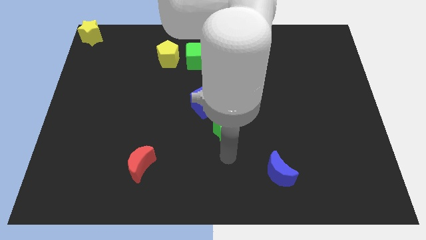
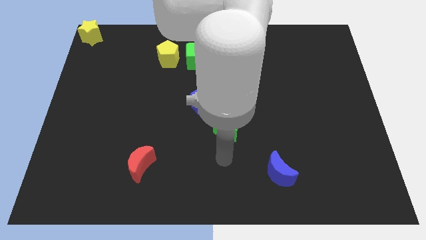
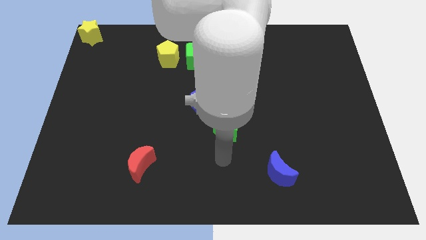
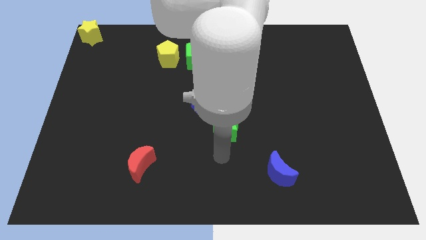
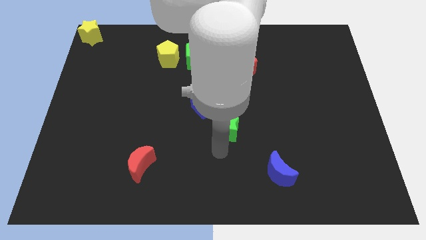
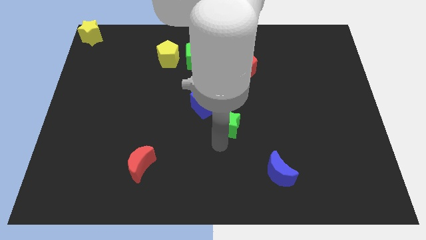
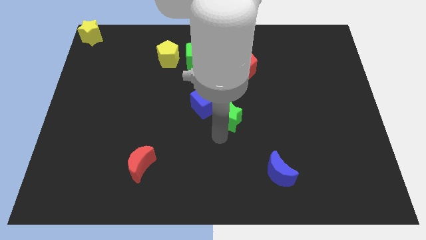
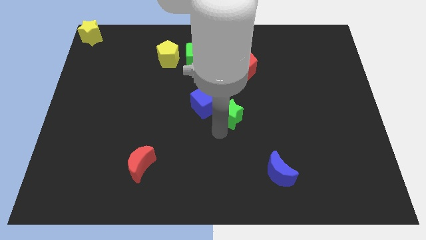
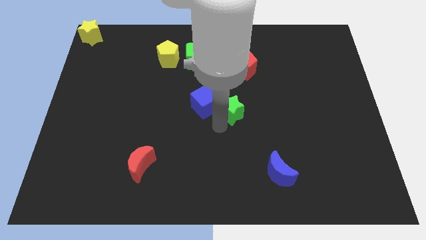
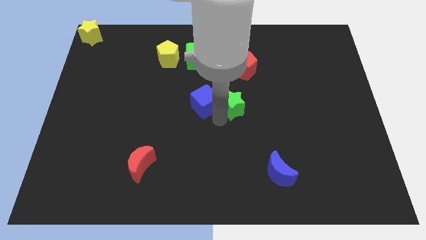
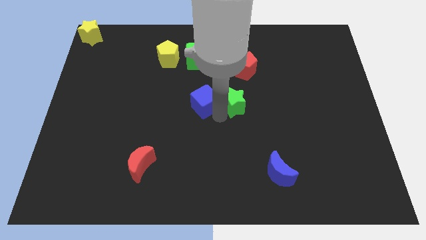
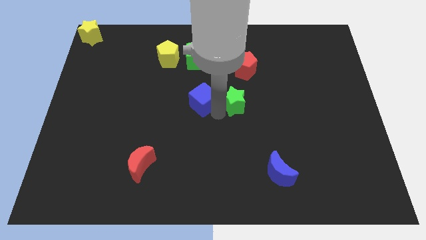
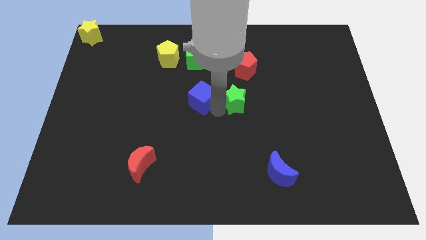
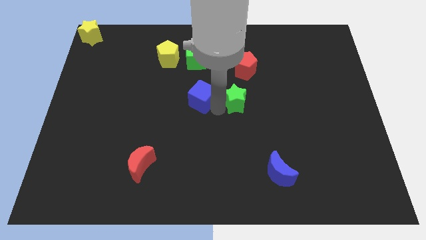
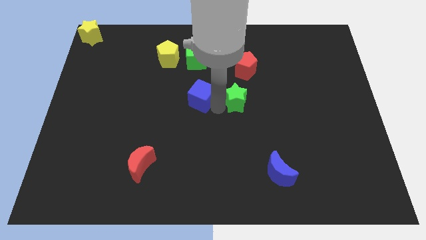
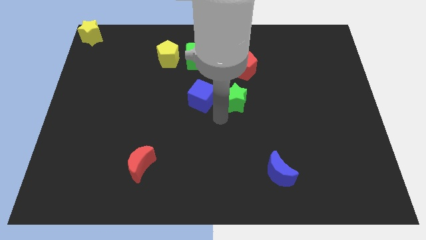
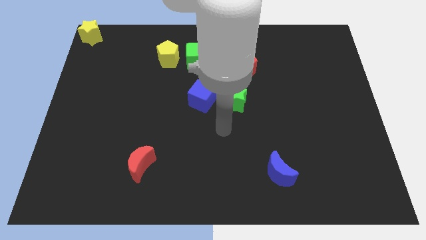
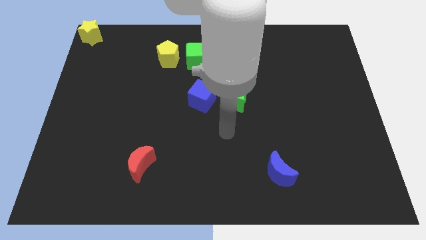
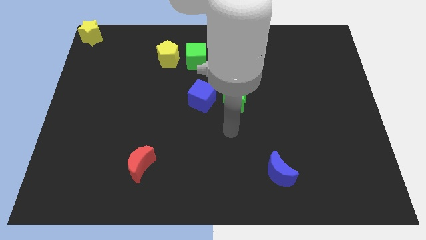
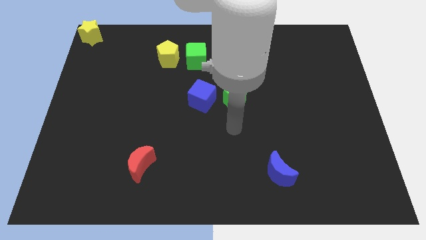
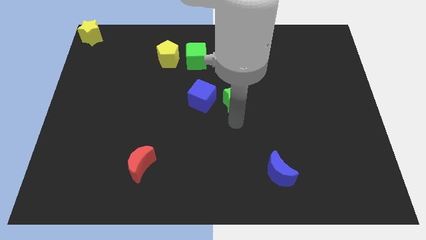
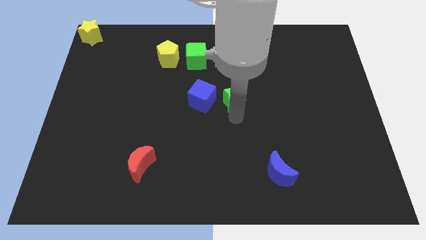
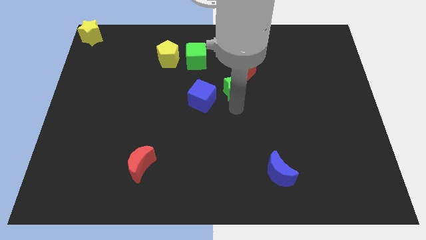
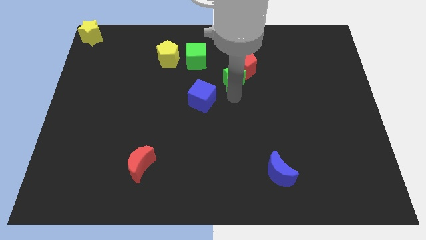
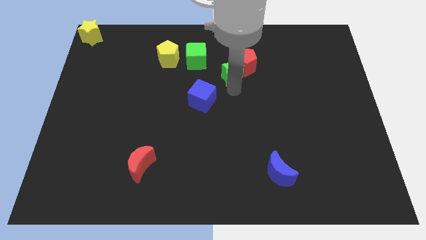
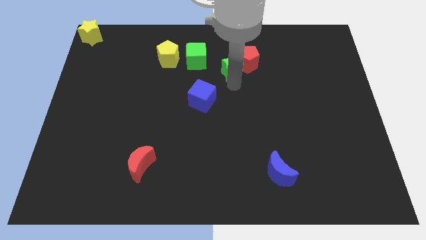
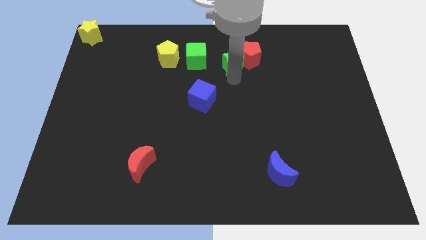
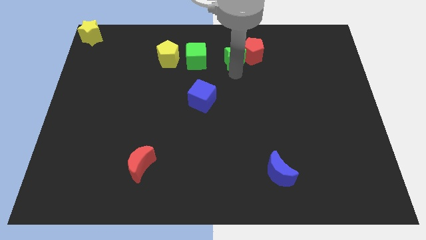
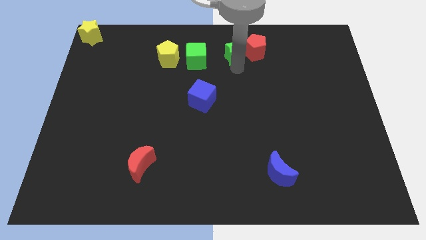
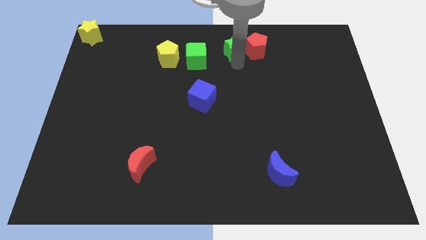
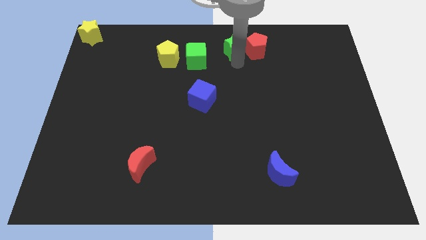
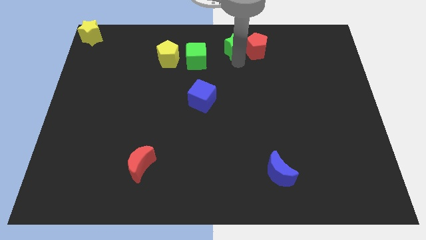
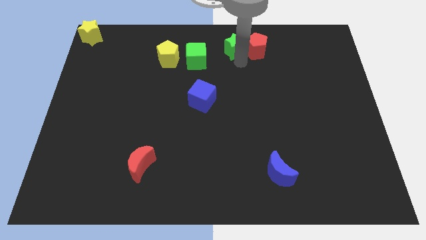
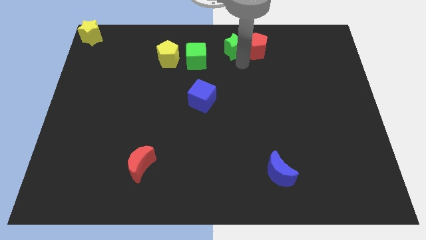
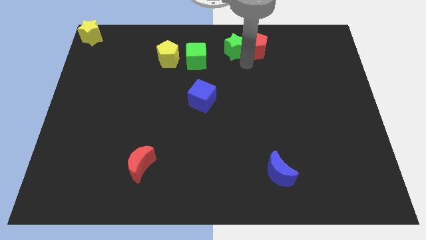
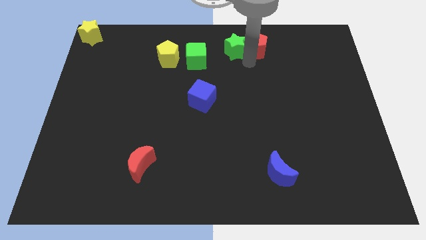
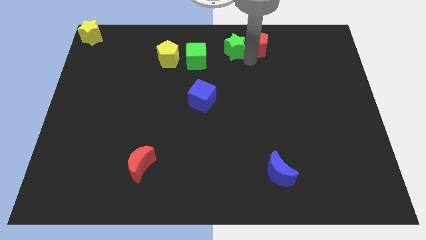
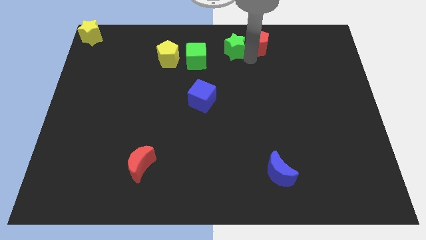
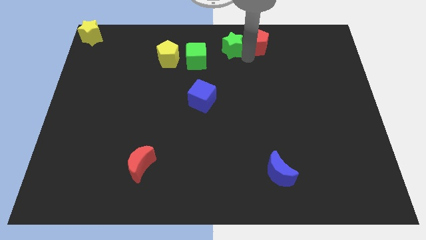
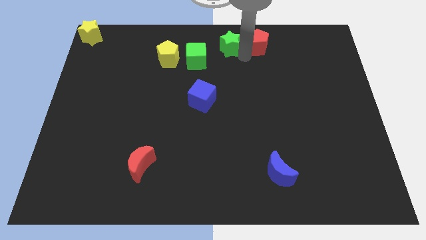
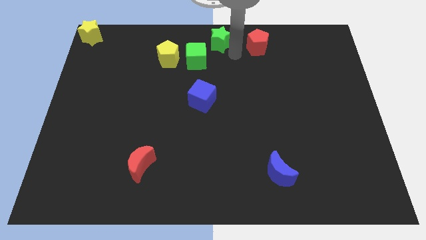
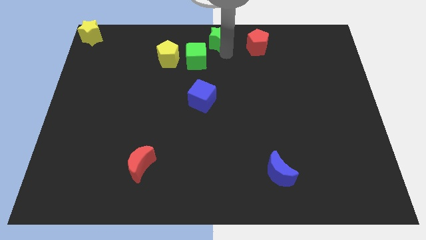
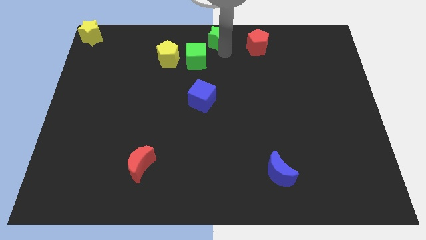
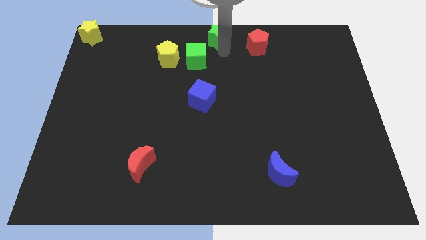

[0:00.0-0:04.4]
push the green star towards the top center side of the board

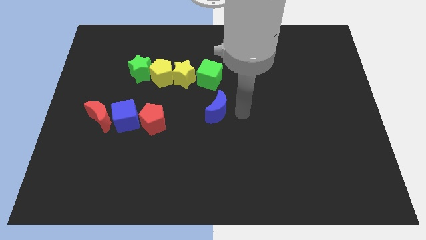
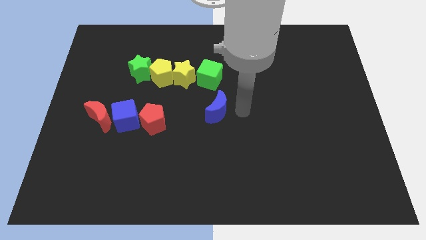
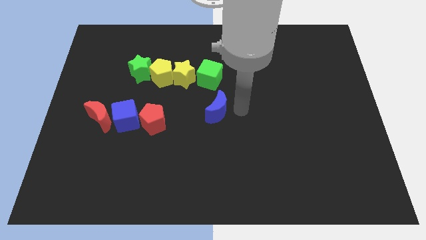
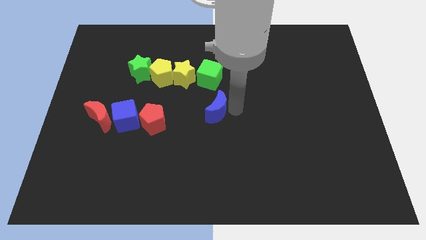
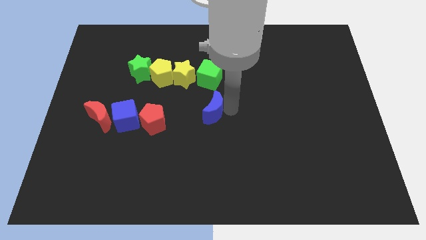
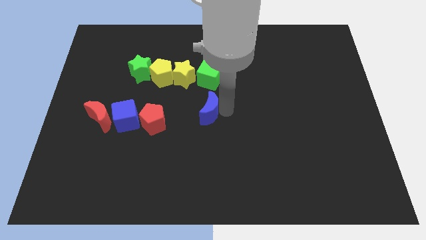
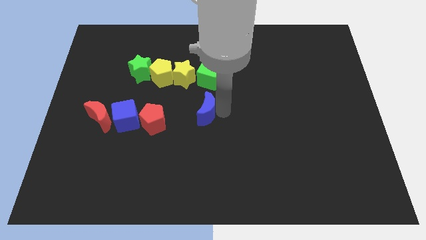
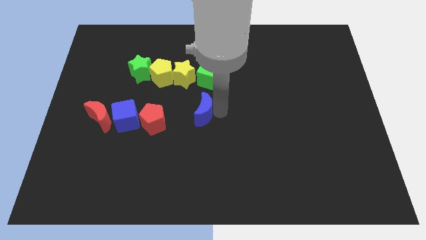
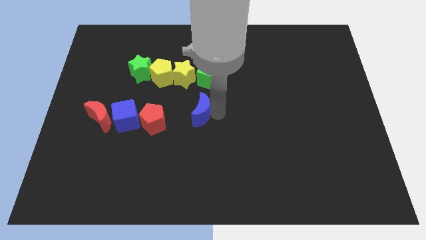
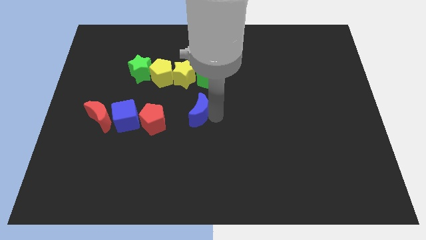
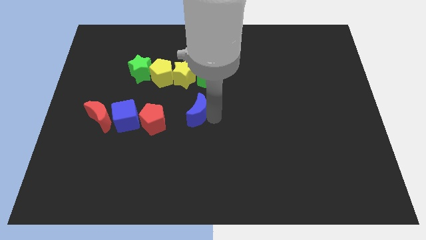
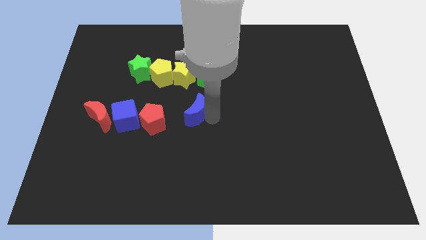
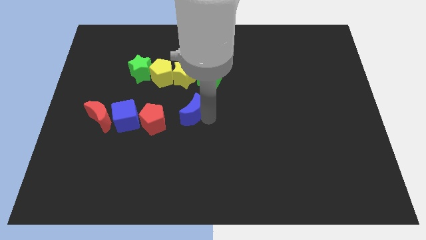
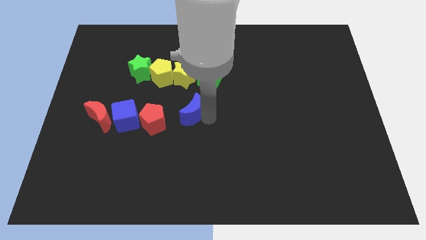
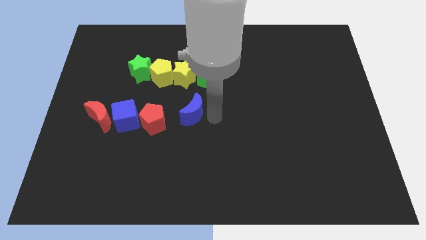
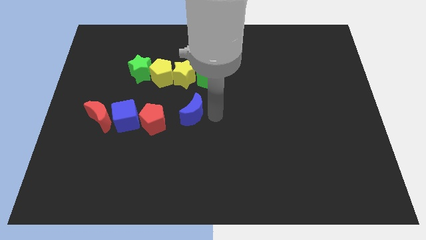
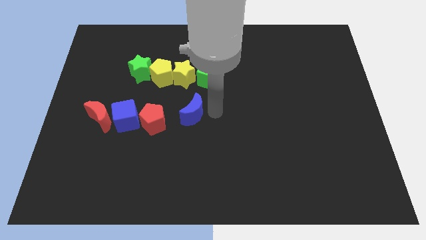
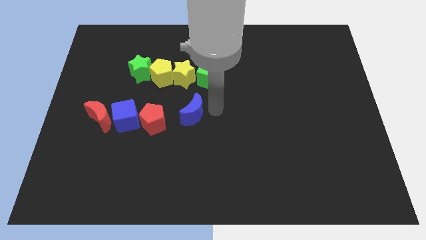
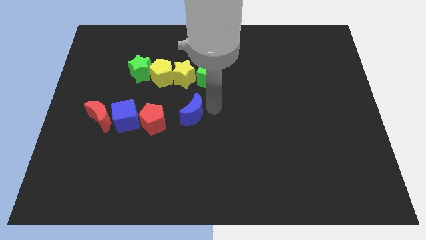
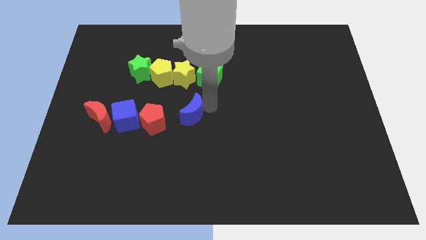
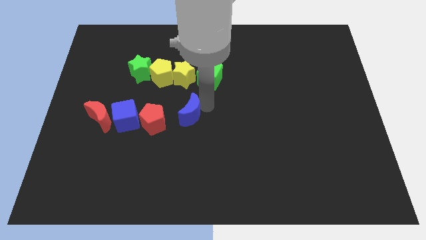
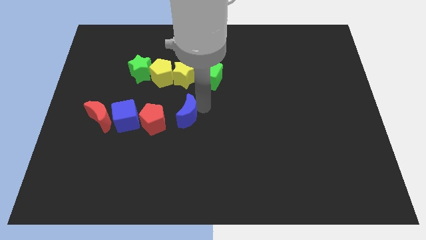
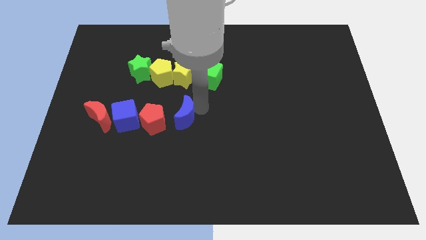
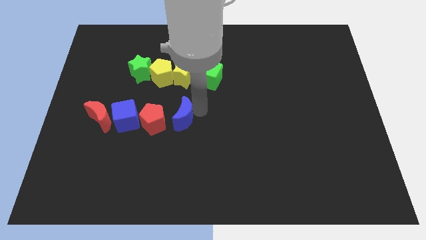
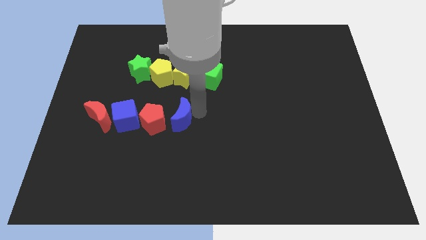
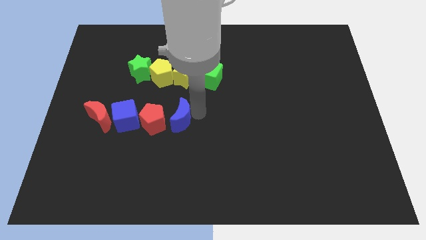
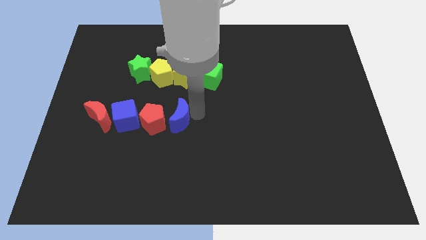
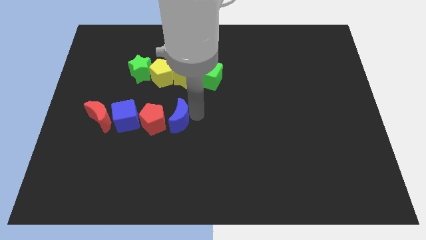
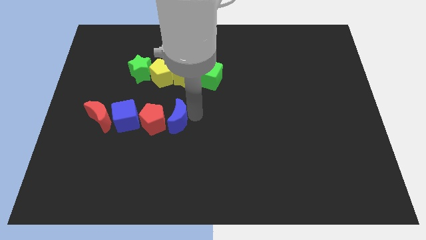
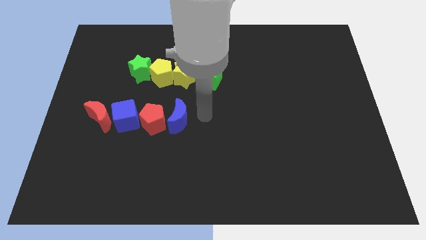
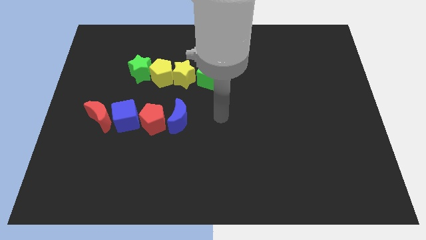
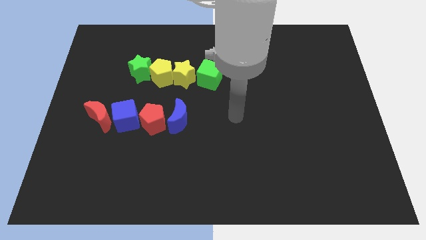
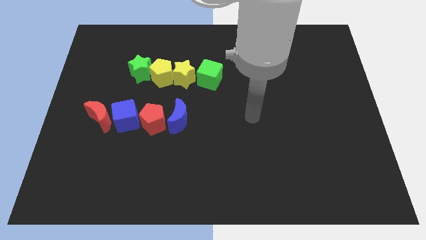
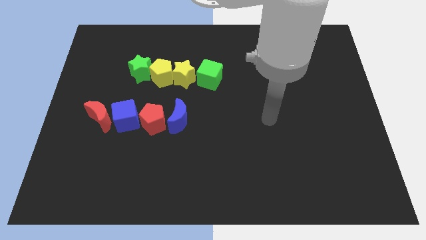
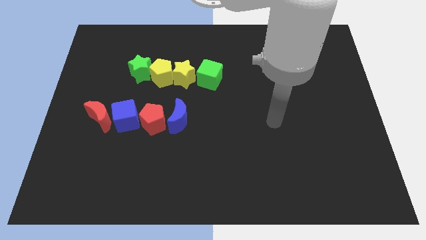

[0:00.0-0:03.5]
move the blue moon to the right side of the red pentagon

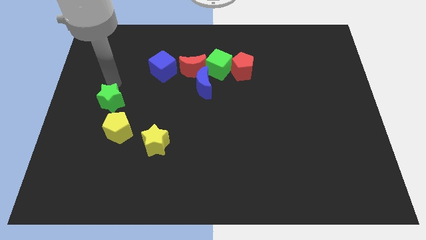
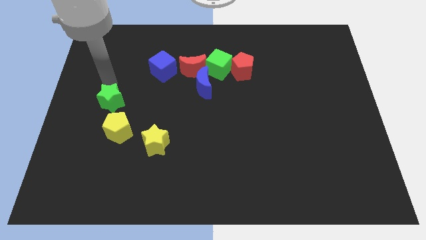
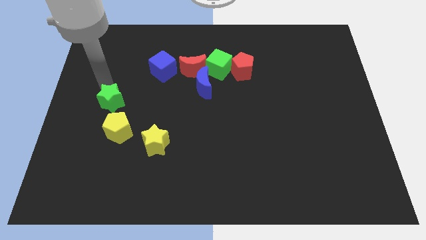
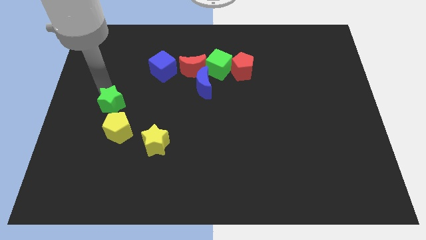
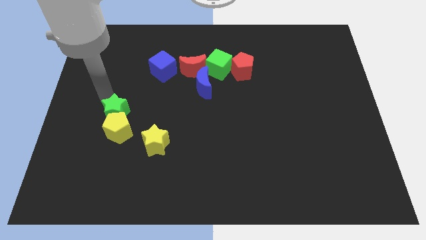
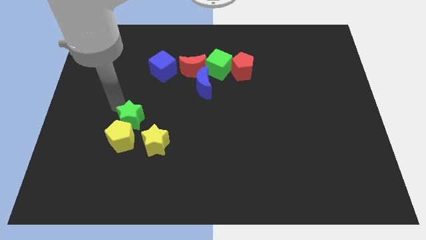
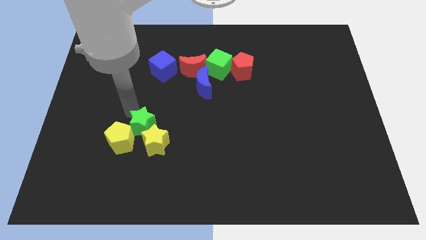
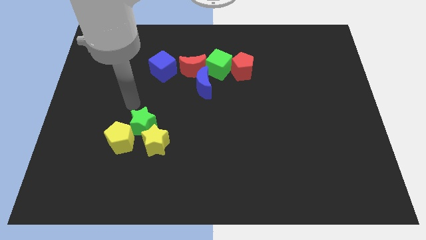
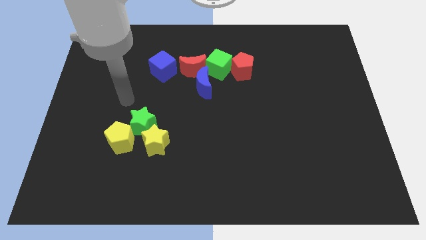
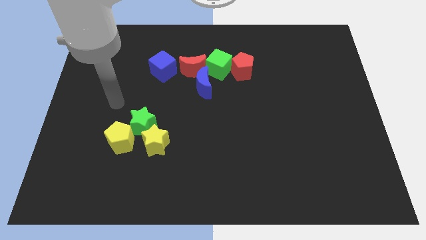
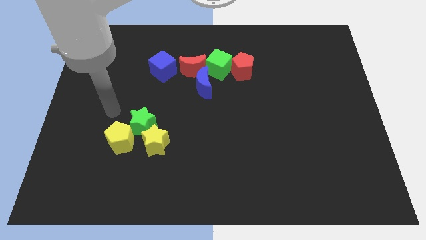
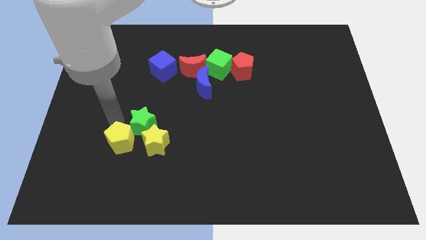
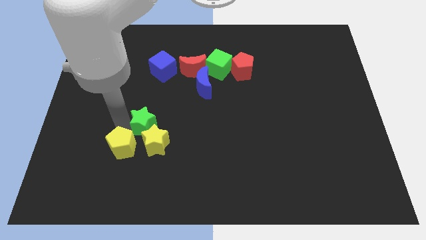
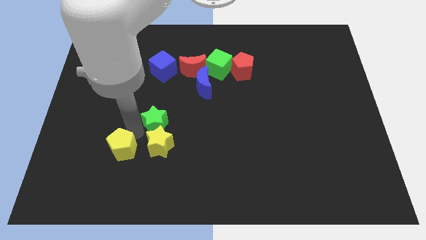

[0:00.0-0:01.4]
place green star on top of yellow star
